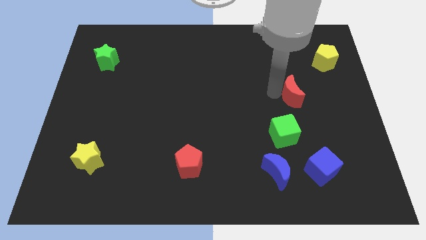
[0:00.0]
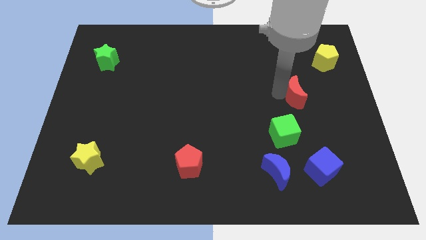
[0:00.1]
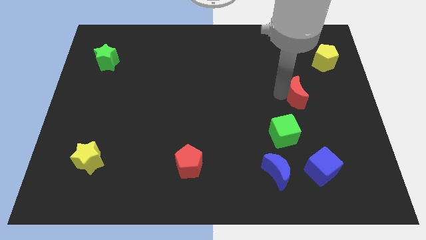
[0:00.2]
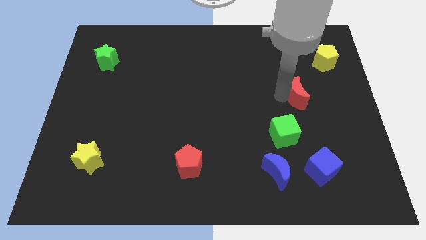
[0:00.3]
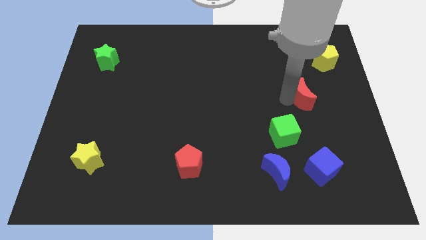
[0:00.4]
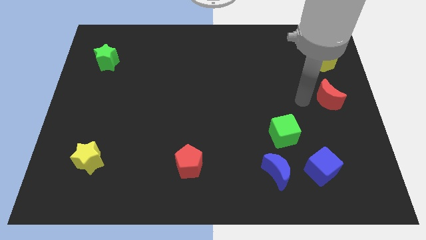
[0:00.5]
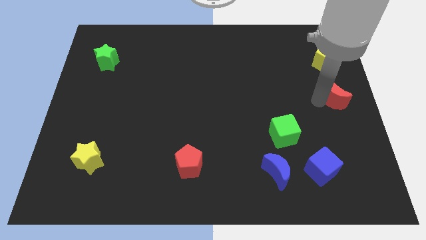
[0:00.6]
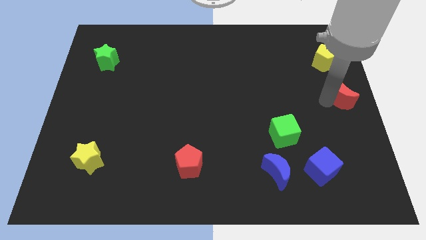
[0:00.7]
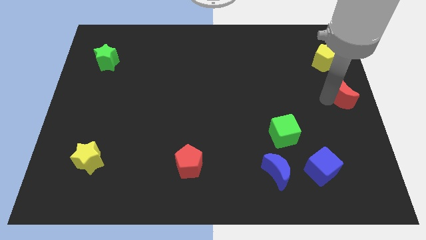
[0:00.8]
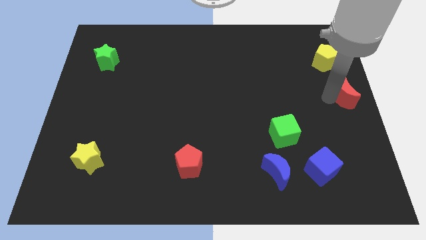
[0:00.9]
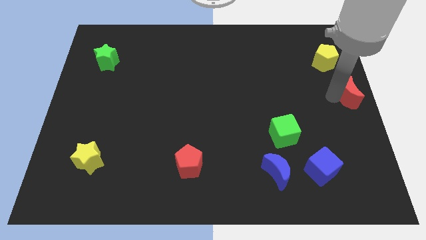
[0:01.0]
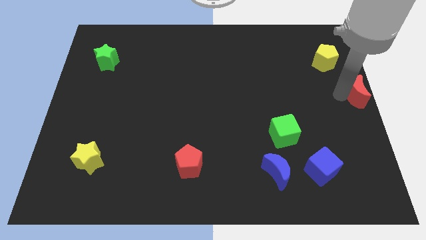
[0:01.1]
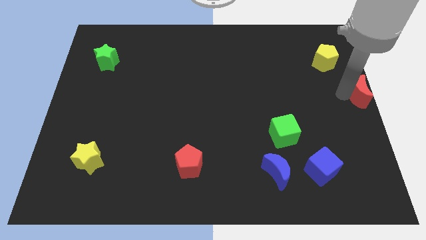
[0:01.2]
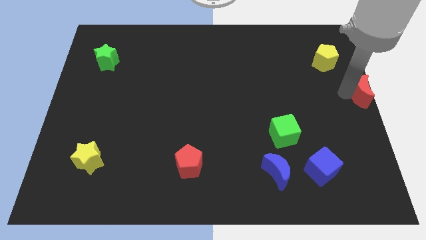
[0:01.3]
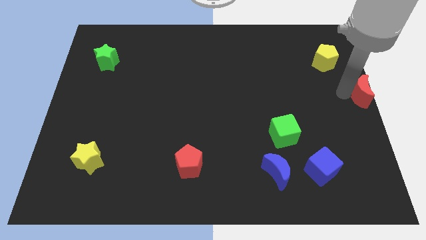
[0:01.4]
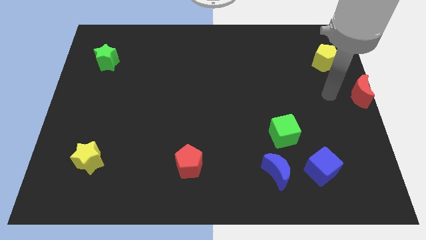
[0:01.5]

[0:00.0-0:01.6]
move the red moon to the center right

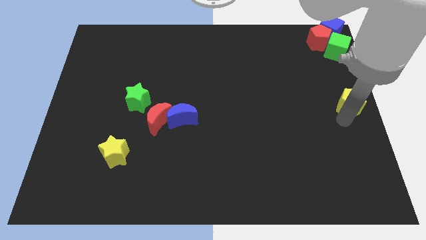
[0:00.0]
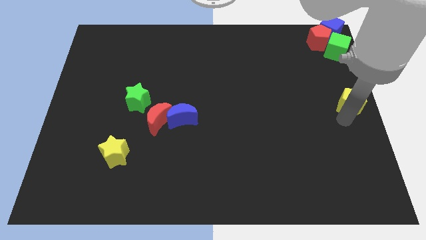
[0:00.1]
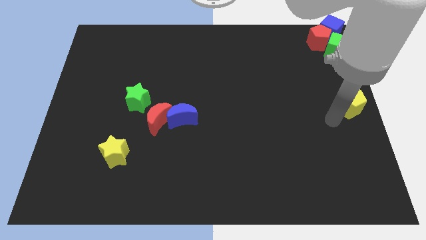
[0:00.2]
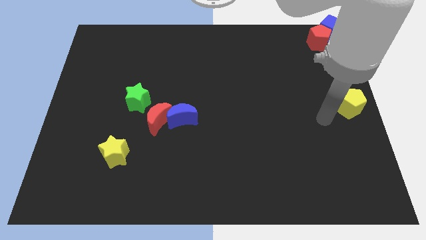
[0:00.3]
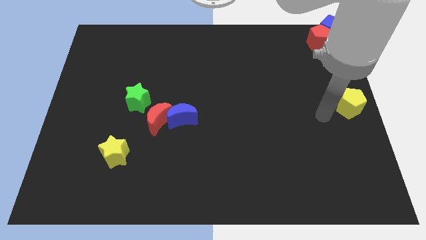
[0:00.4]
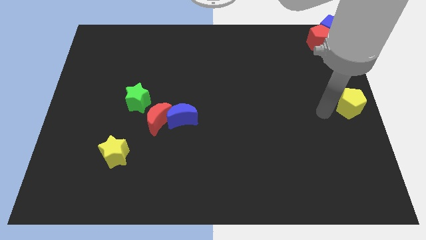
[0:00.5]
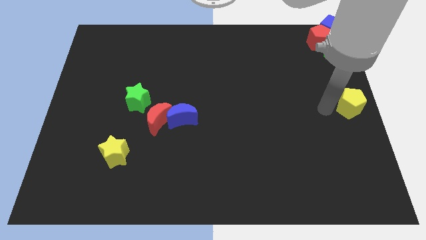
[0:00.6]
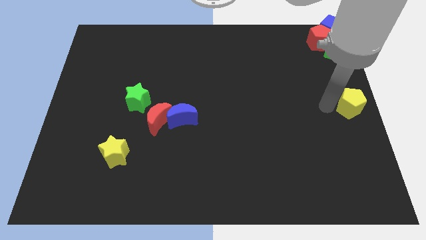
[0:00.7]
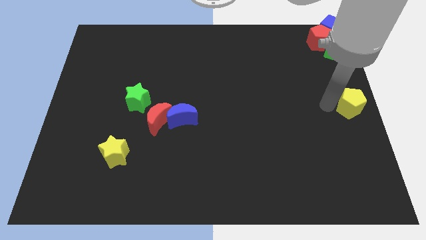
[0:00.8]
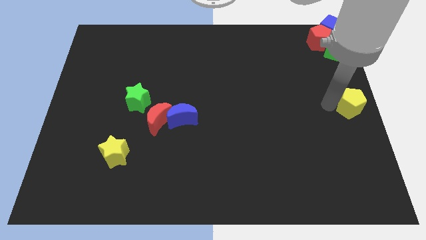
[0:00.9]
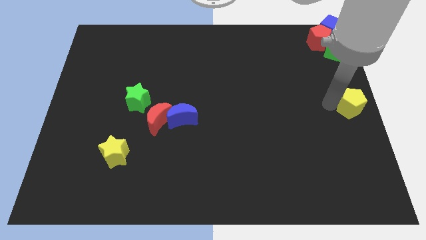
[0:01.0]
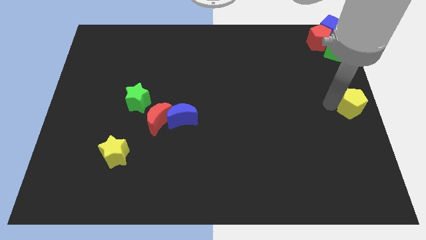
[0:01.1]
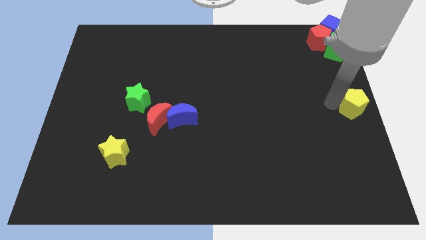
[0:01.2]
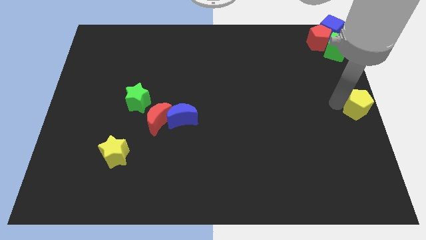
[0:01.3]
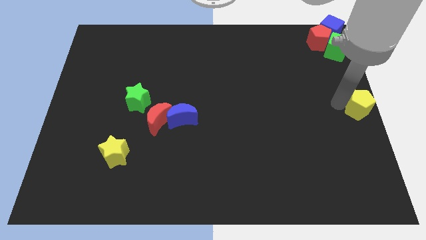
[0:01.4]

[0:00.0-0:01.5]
place the yellow pentagon towards the center right side of the board

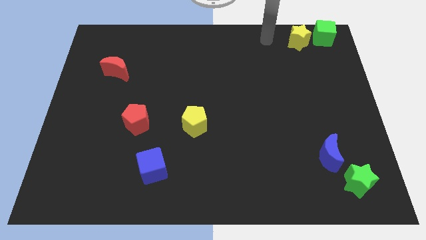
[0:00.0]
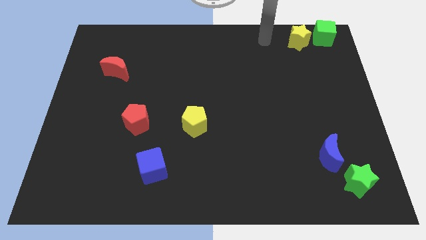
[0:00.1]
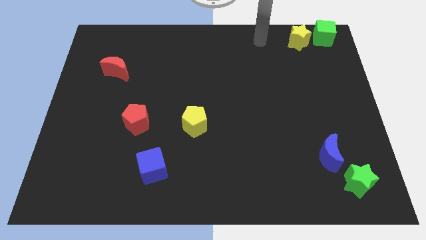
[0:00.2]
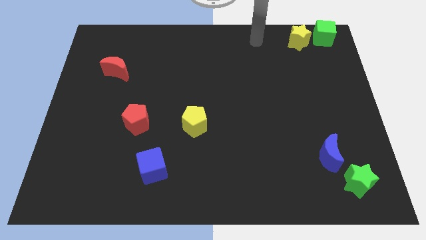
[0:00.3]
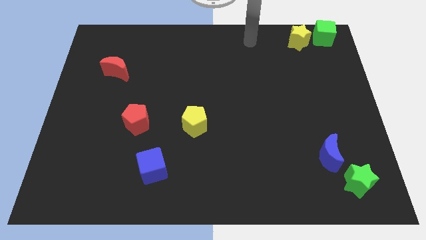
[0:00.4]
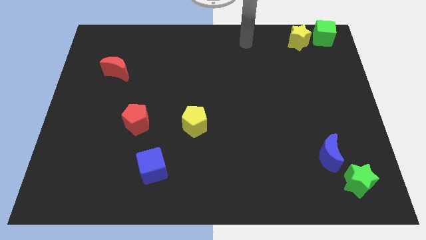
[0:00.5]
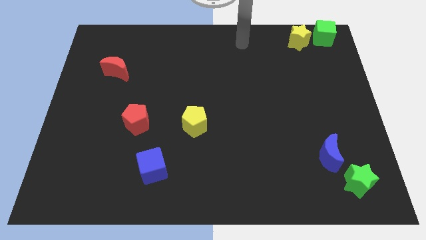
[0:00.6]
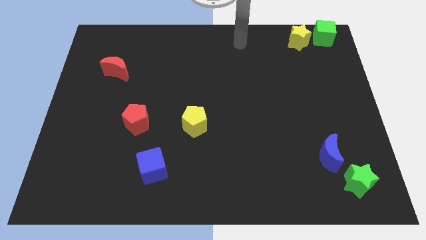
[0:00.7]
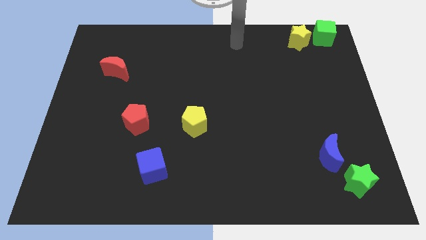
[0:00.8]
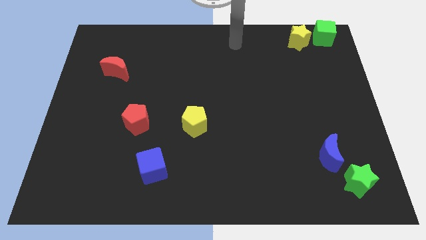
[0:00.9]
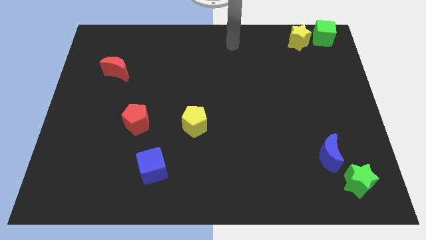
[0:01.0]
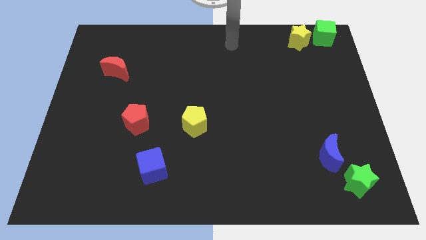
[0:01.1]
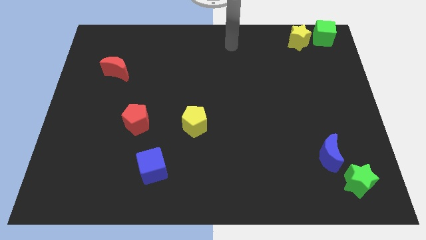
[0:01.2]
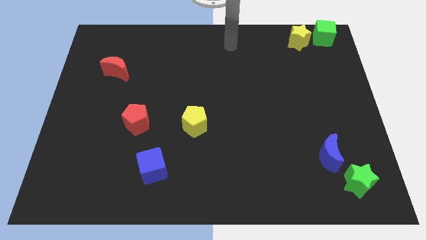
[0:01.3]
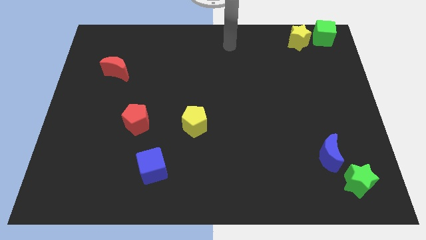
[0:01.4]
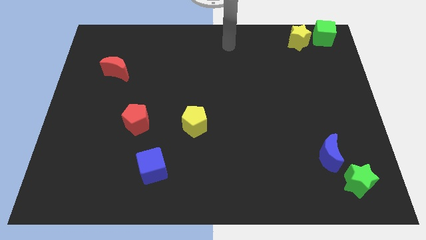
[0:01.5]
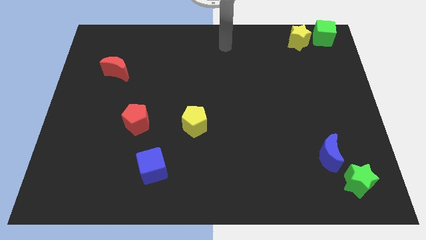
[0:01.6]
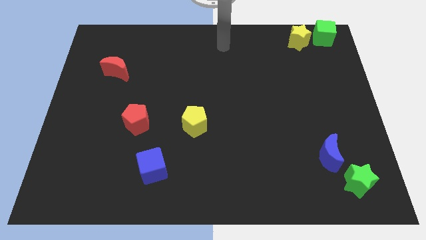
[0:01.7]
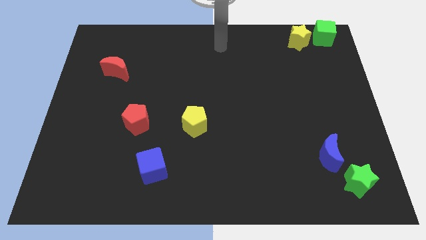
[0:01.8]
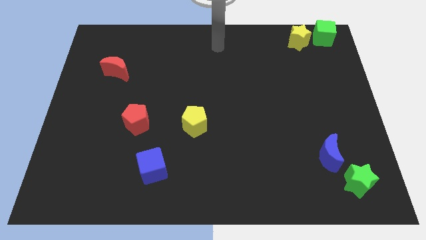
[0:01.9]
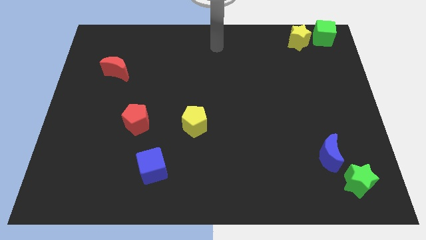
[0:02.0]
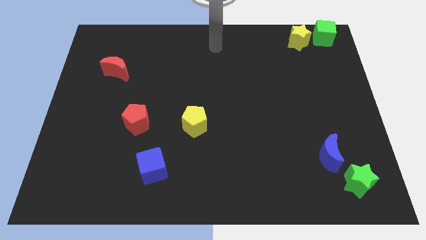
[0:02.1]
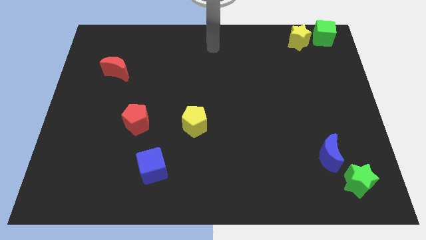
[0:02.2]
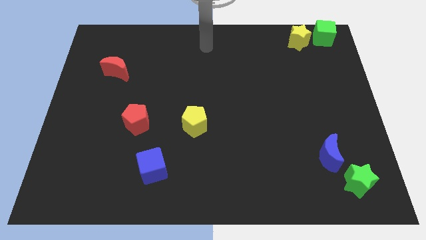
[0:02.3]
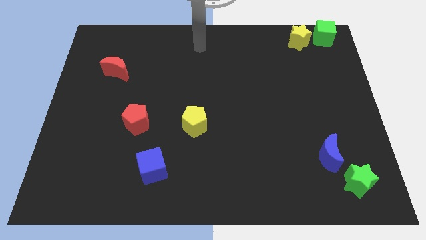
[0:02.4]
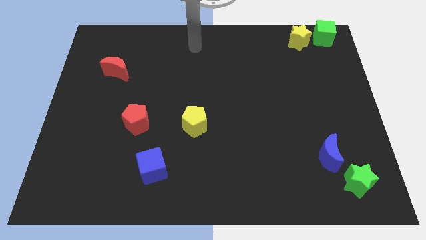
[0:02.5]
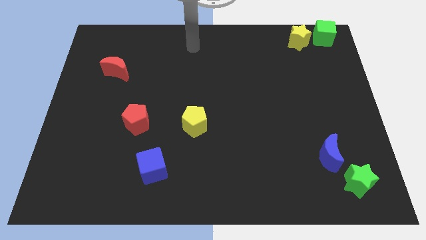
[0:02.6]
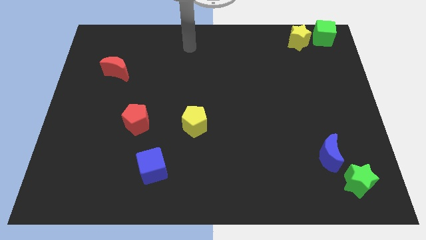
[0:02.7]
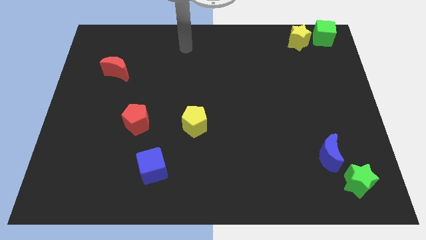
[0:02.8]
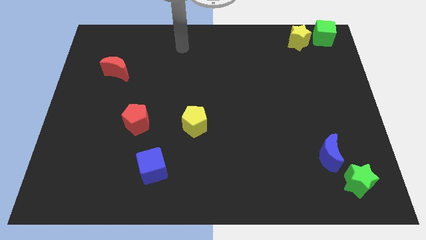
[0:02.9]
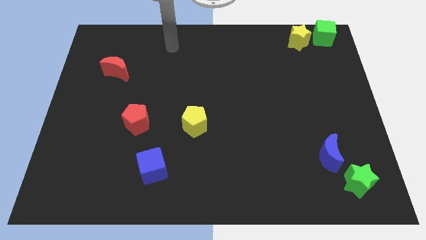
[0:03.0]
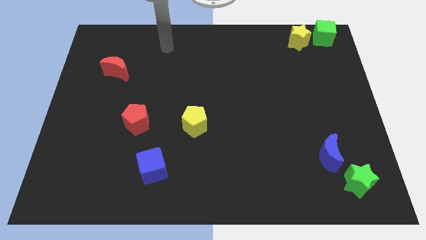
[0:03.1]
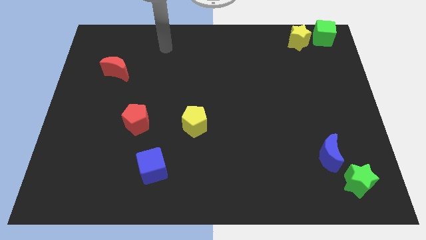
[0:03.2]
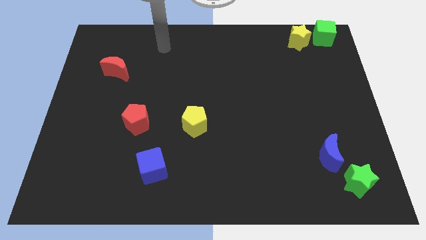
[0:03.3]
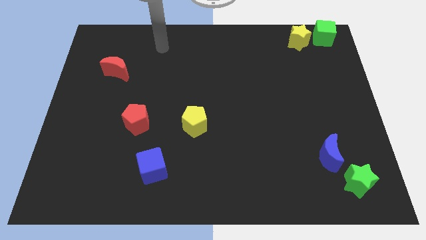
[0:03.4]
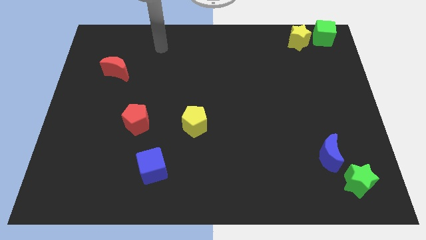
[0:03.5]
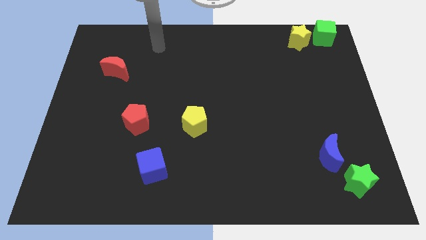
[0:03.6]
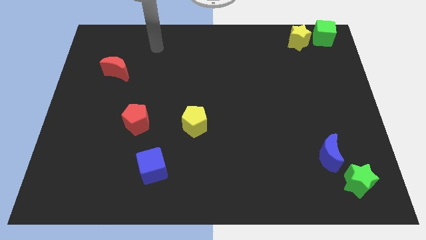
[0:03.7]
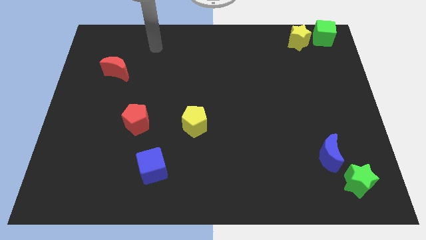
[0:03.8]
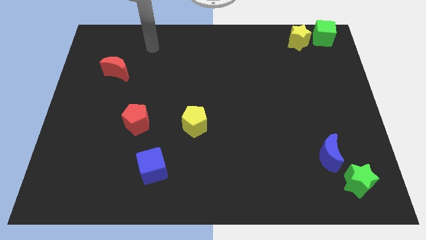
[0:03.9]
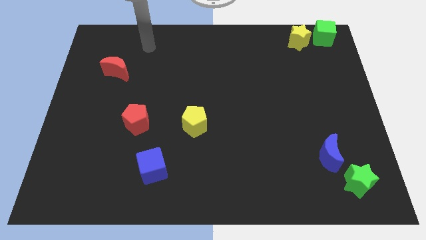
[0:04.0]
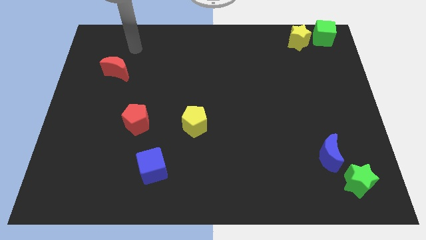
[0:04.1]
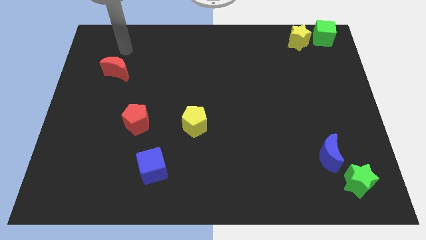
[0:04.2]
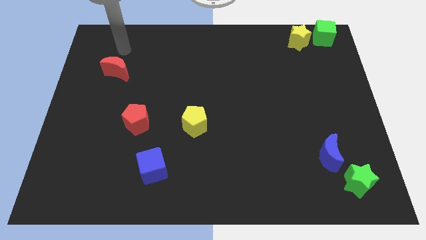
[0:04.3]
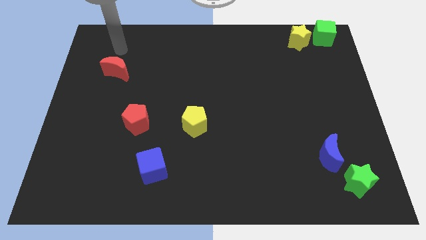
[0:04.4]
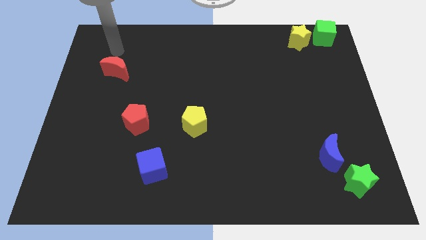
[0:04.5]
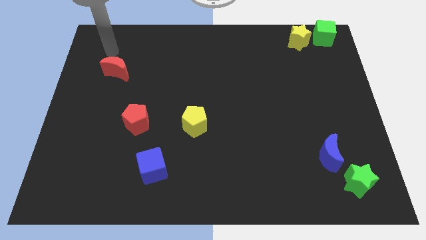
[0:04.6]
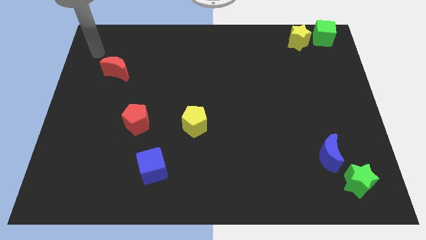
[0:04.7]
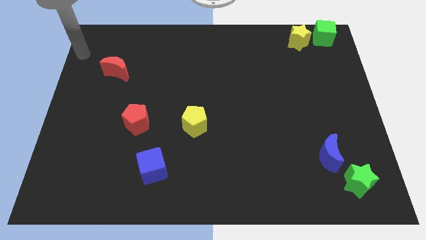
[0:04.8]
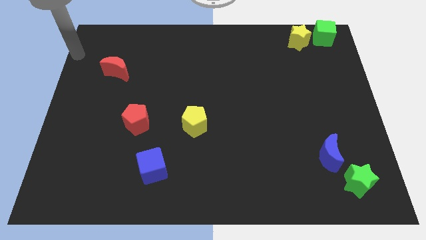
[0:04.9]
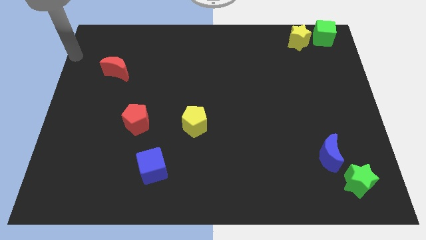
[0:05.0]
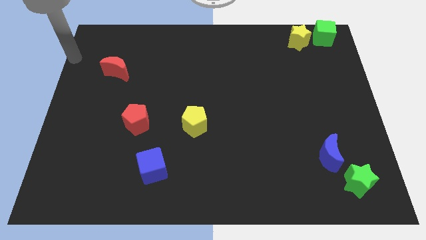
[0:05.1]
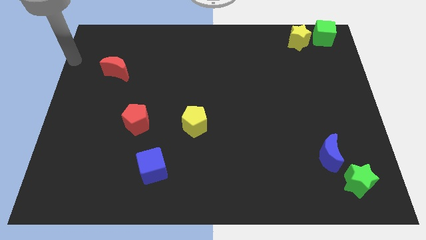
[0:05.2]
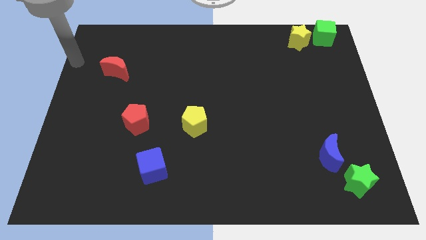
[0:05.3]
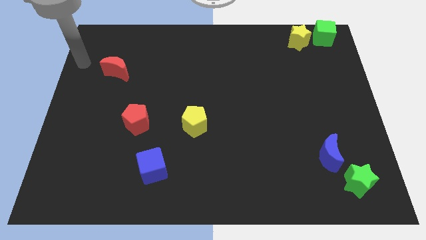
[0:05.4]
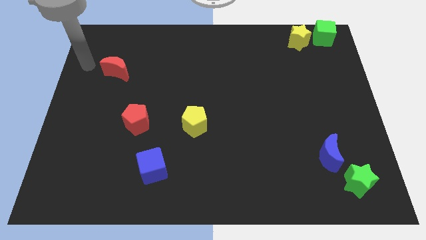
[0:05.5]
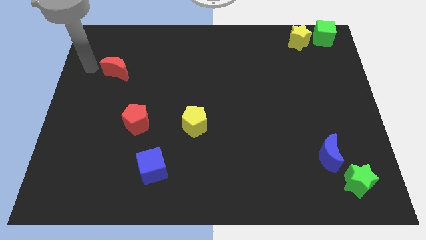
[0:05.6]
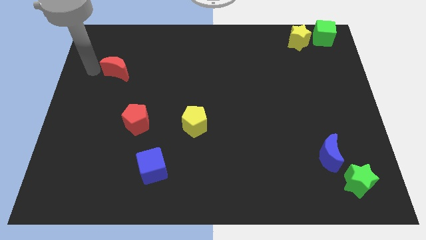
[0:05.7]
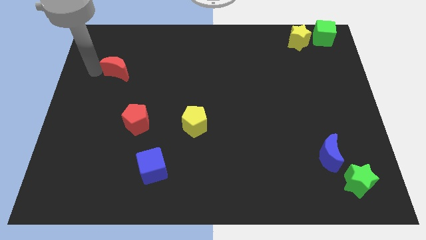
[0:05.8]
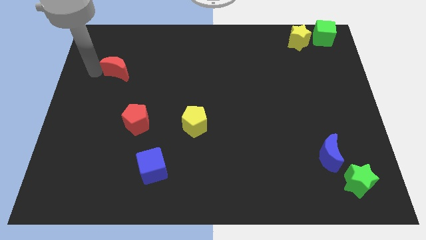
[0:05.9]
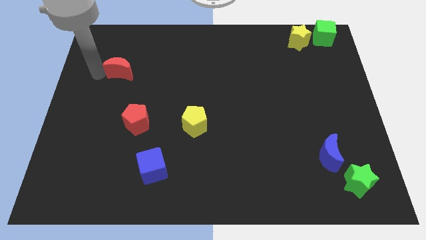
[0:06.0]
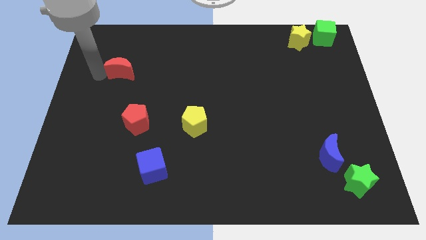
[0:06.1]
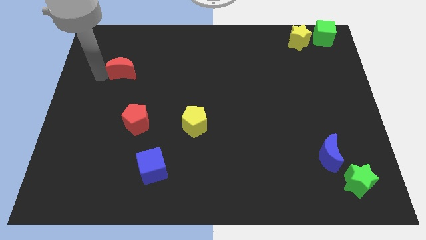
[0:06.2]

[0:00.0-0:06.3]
move arm near red crescent
